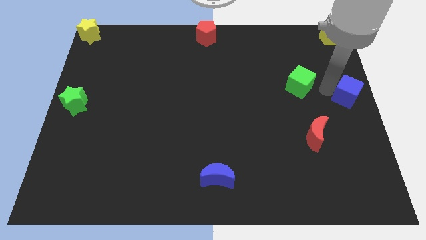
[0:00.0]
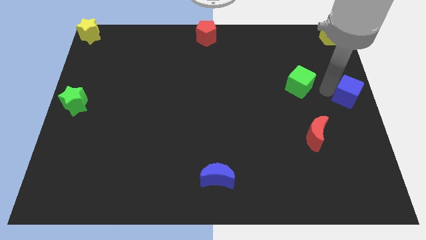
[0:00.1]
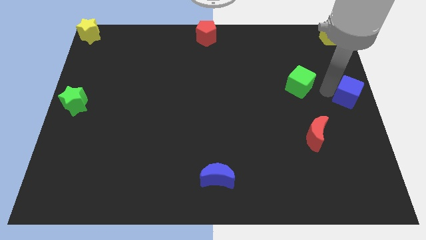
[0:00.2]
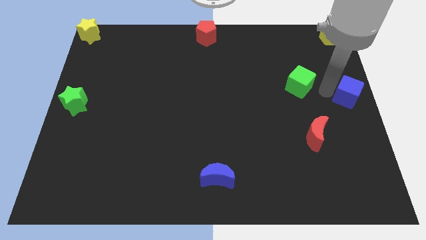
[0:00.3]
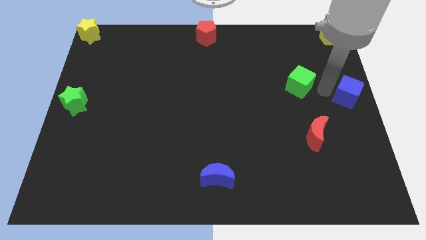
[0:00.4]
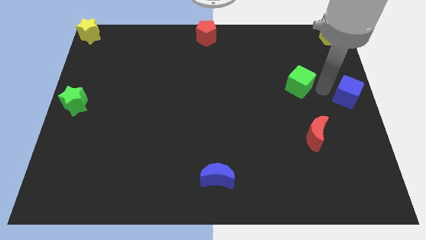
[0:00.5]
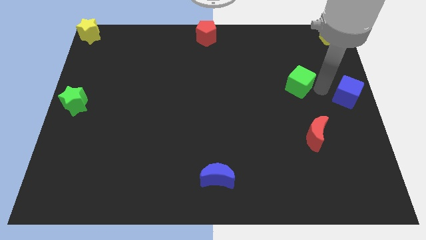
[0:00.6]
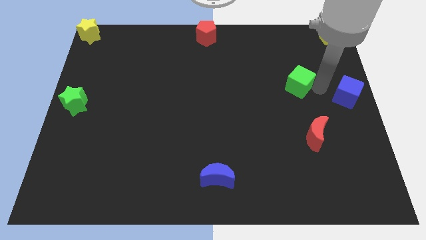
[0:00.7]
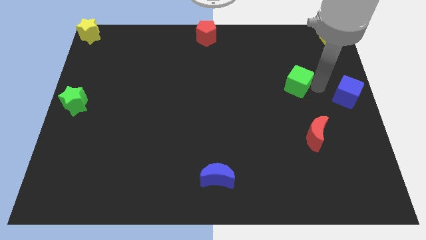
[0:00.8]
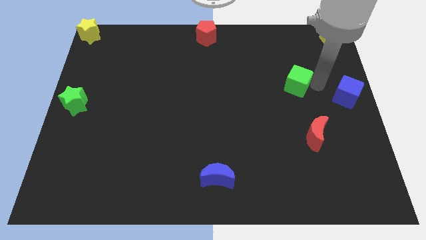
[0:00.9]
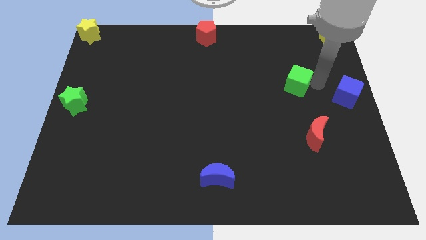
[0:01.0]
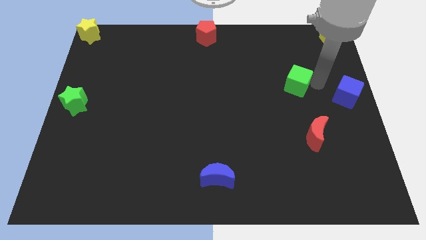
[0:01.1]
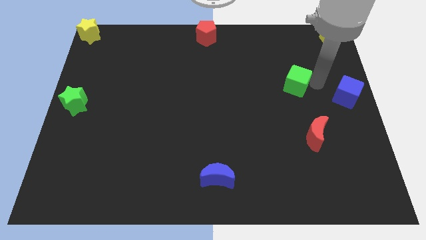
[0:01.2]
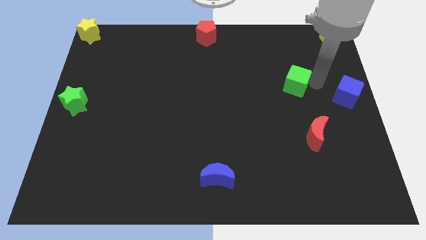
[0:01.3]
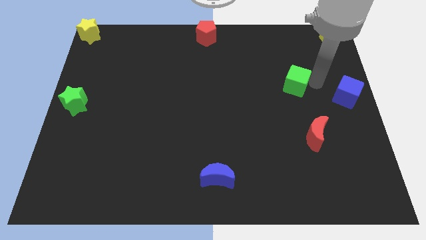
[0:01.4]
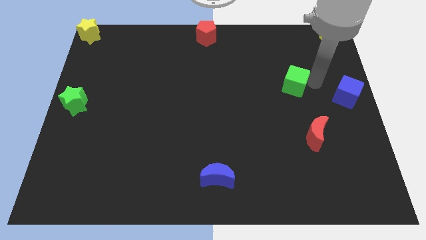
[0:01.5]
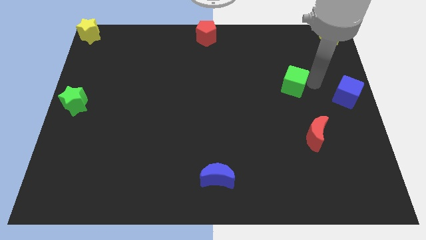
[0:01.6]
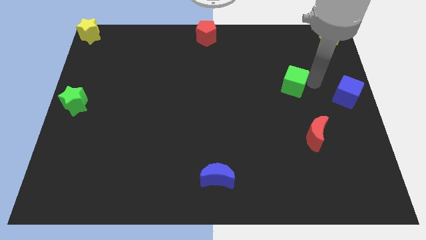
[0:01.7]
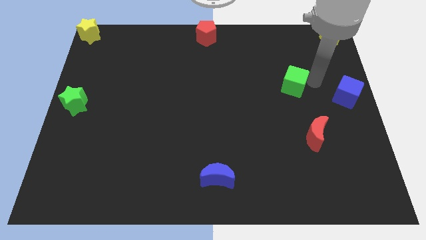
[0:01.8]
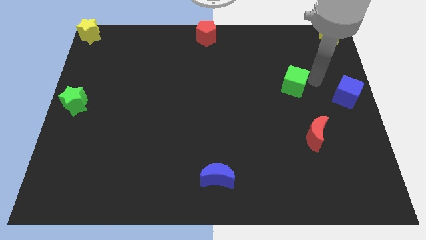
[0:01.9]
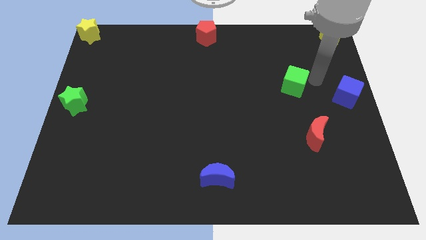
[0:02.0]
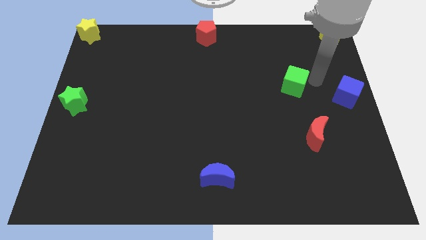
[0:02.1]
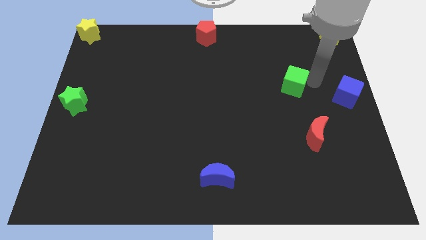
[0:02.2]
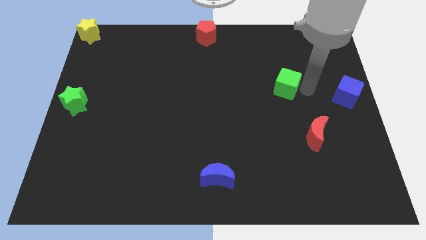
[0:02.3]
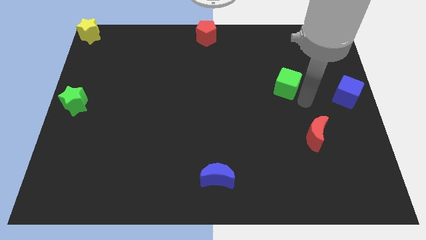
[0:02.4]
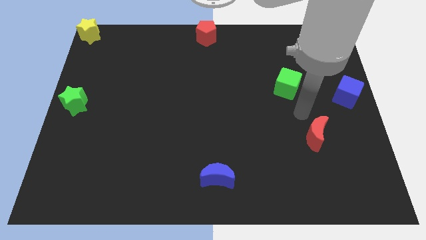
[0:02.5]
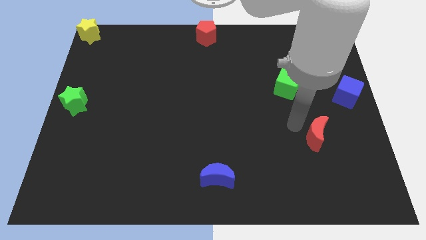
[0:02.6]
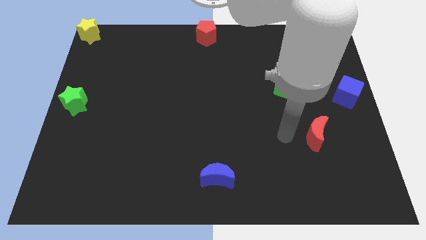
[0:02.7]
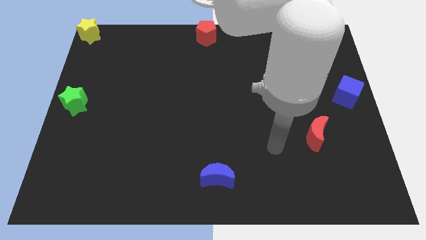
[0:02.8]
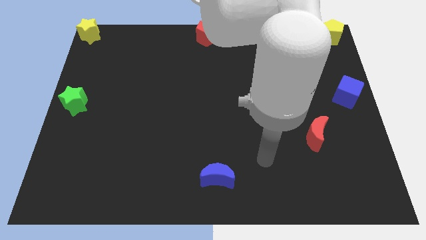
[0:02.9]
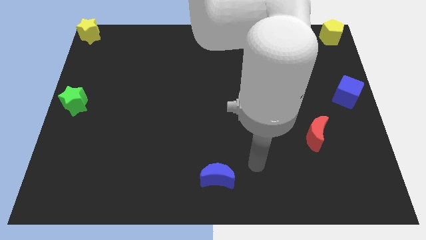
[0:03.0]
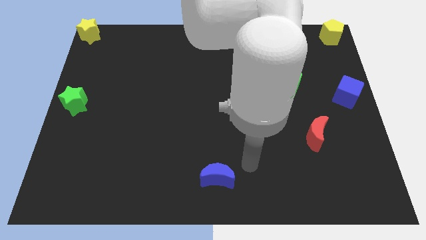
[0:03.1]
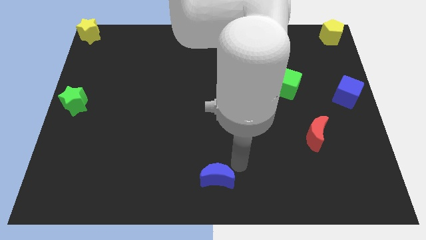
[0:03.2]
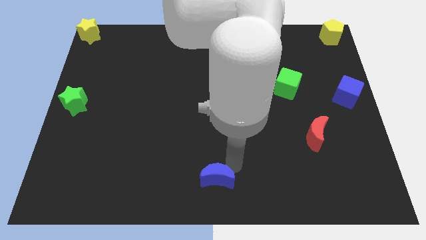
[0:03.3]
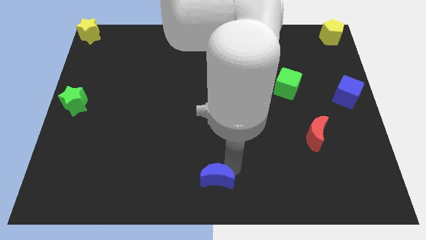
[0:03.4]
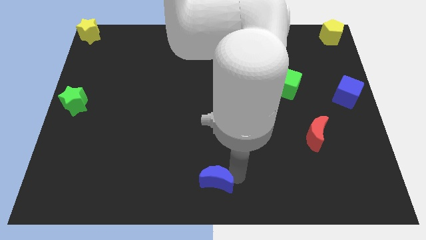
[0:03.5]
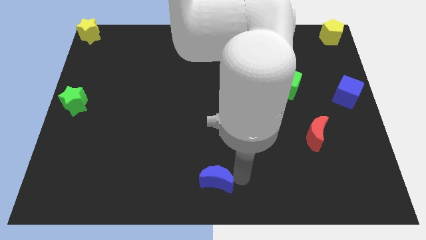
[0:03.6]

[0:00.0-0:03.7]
move your arm away from the blue cube

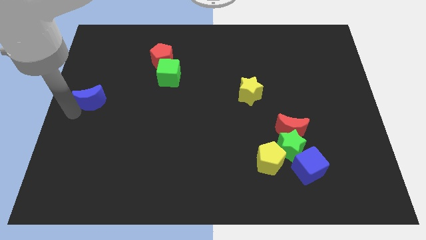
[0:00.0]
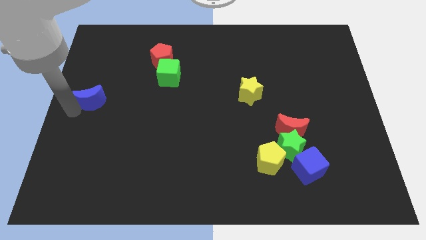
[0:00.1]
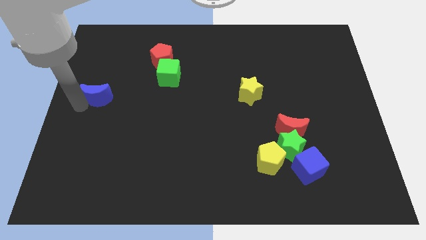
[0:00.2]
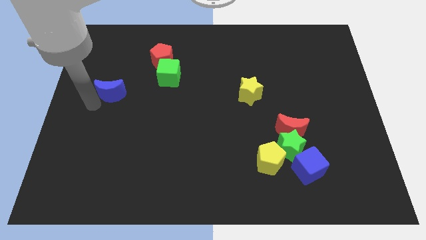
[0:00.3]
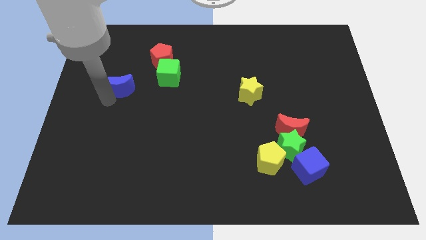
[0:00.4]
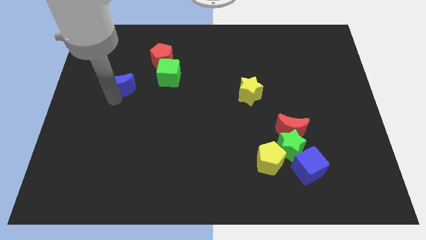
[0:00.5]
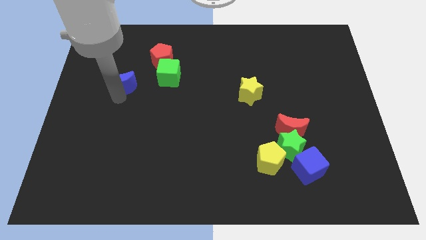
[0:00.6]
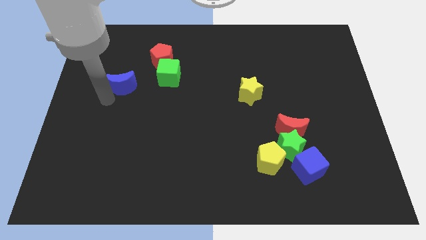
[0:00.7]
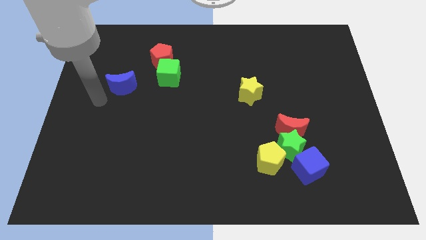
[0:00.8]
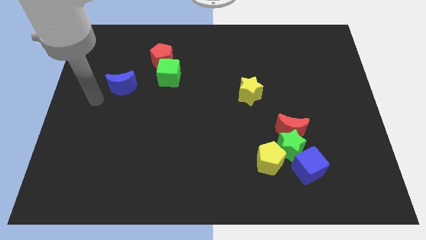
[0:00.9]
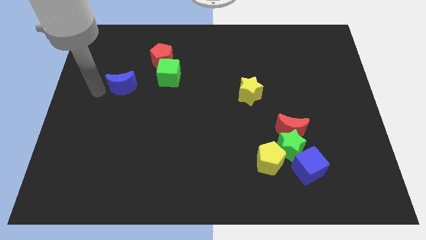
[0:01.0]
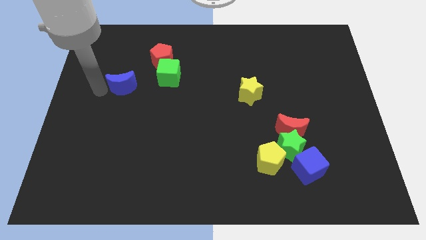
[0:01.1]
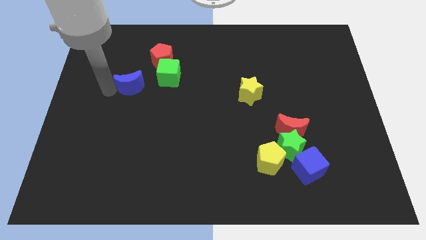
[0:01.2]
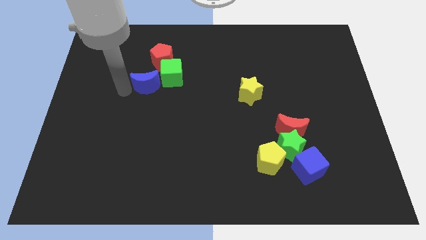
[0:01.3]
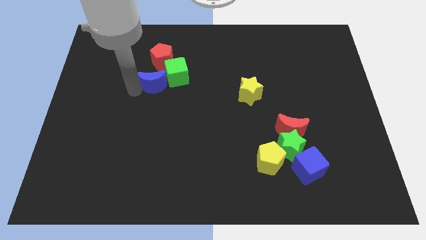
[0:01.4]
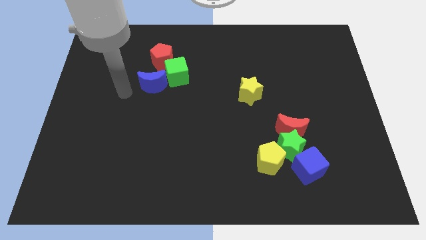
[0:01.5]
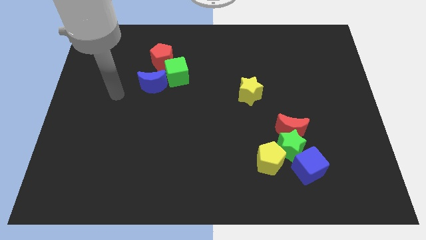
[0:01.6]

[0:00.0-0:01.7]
slide the blue crescent into the green cube

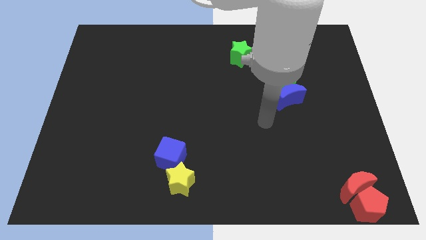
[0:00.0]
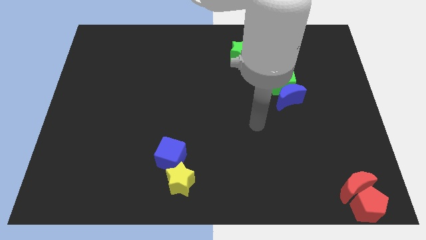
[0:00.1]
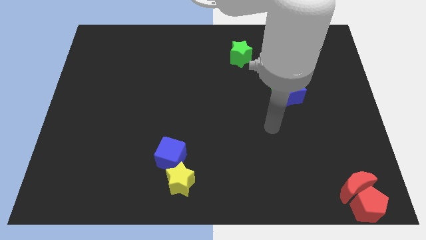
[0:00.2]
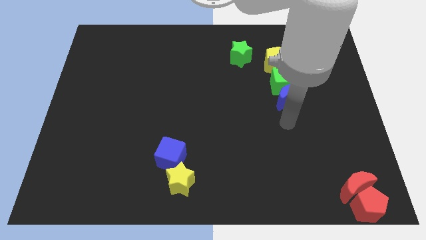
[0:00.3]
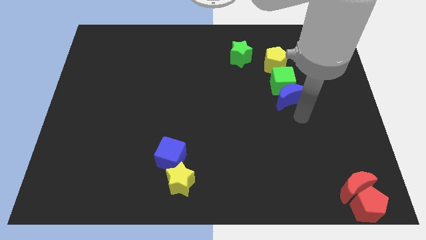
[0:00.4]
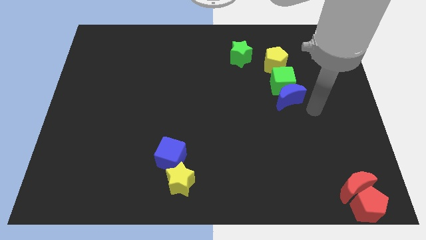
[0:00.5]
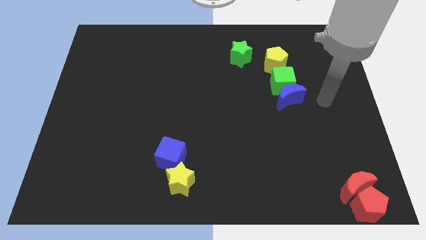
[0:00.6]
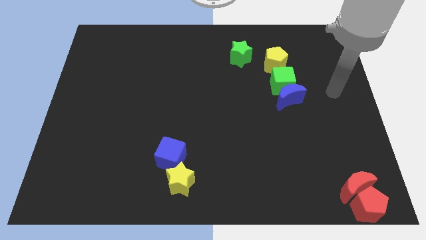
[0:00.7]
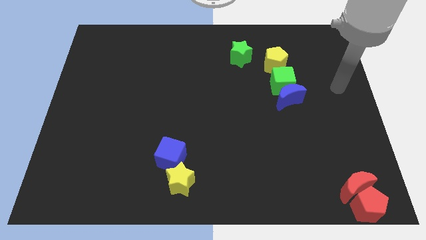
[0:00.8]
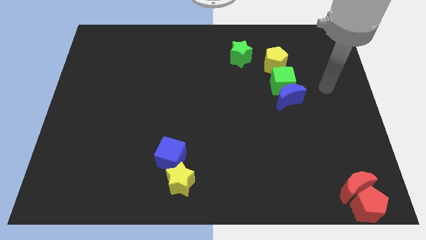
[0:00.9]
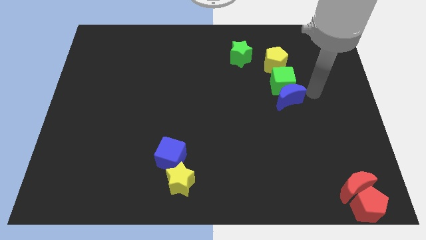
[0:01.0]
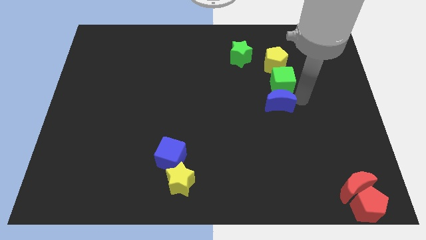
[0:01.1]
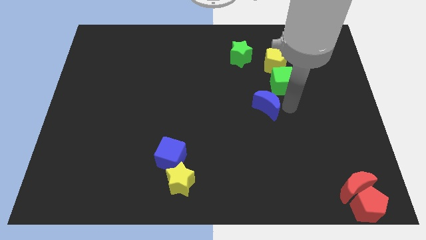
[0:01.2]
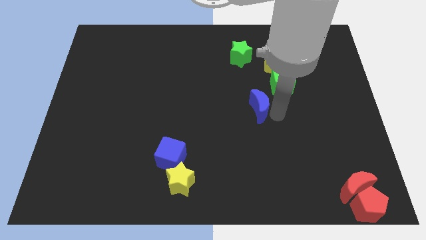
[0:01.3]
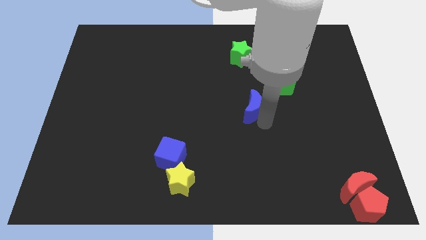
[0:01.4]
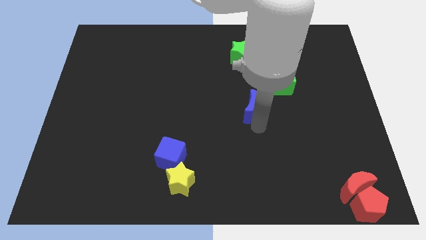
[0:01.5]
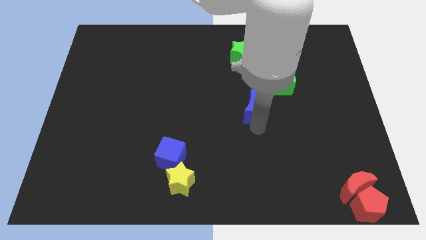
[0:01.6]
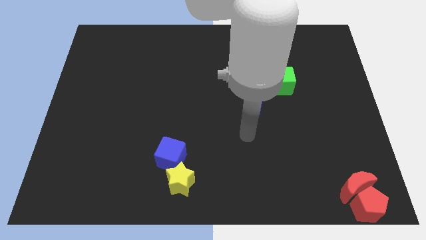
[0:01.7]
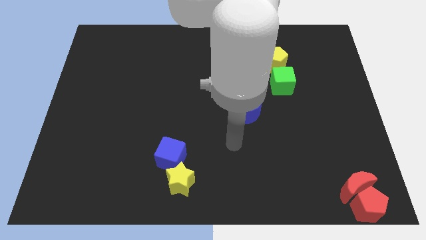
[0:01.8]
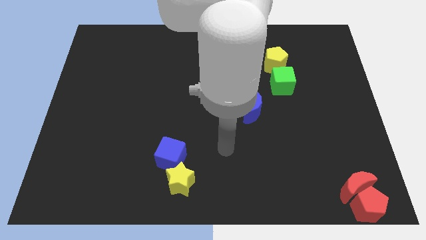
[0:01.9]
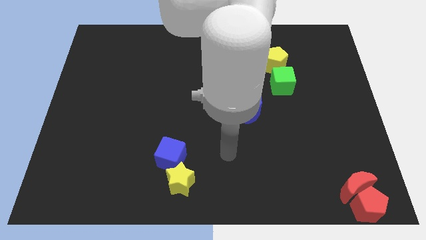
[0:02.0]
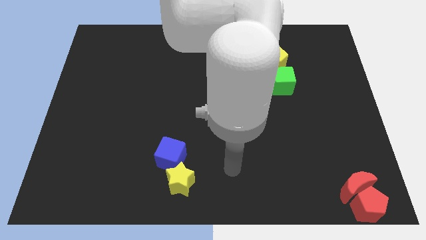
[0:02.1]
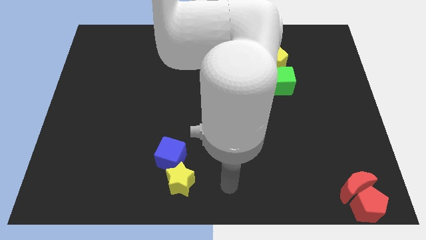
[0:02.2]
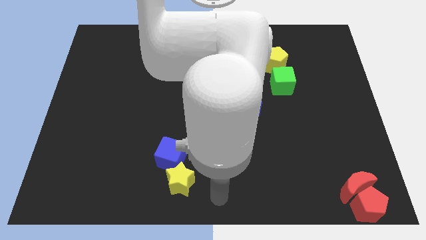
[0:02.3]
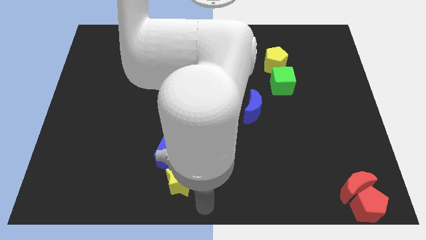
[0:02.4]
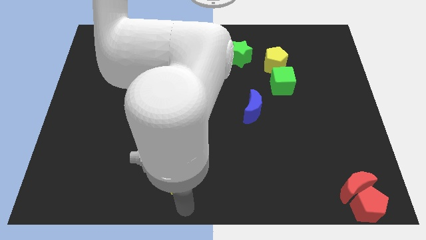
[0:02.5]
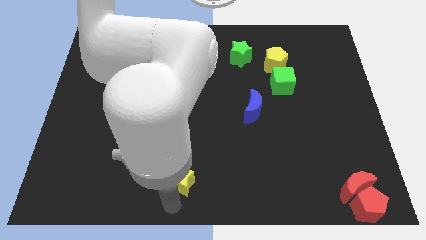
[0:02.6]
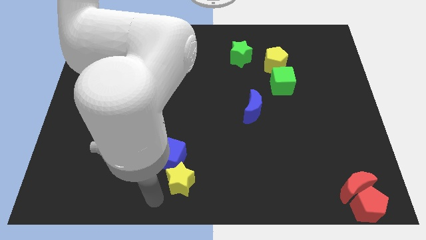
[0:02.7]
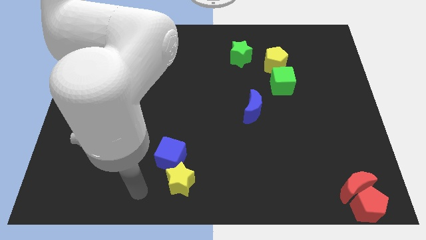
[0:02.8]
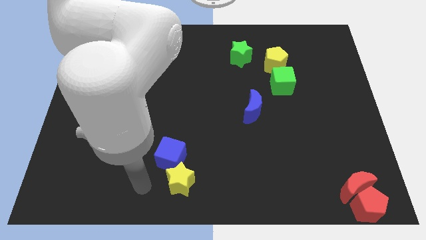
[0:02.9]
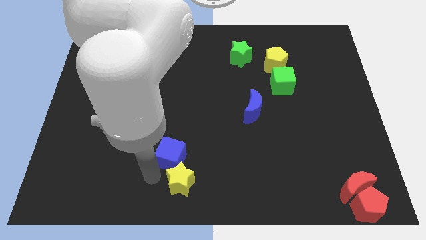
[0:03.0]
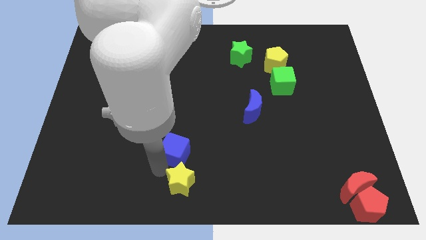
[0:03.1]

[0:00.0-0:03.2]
separate blue moon from the green cube

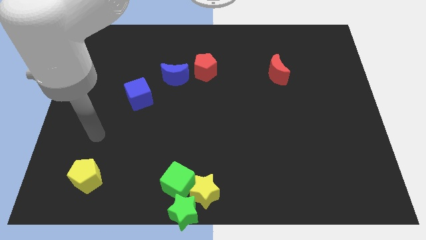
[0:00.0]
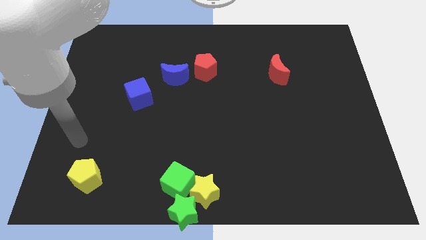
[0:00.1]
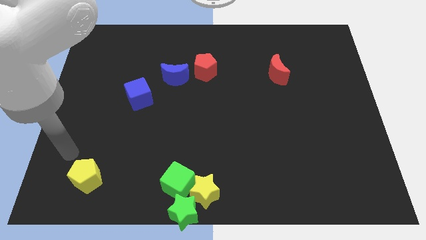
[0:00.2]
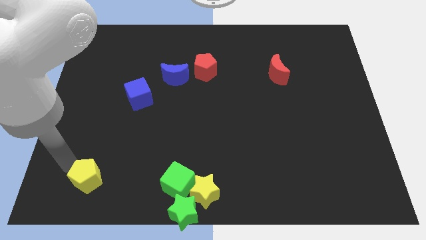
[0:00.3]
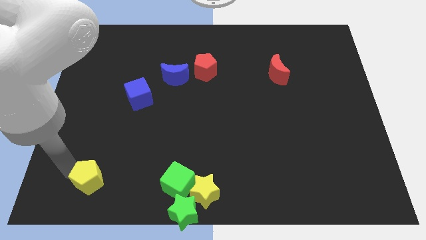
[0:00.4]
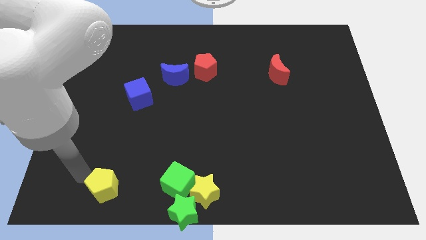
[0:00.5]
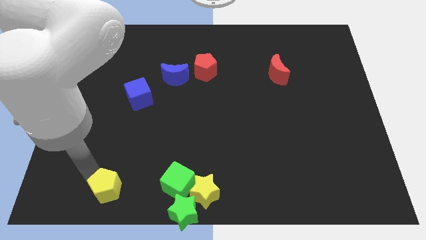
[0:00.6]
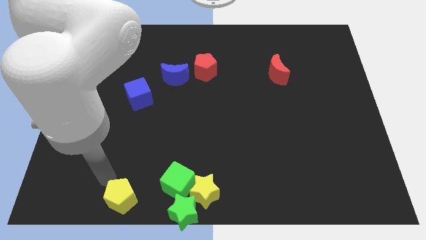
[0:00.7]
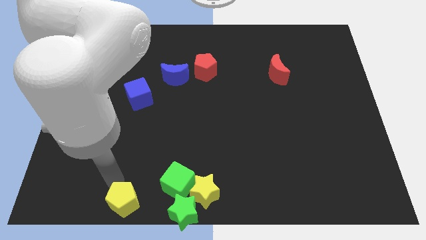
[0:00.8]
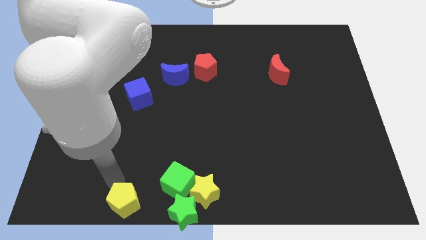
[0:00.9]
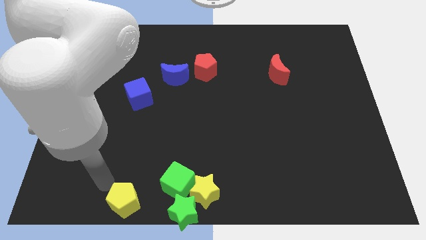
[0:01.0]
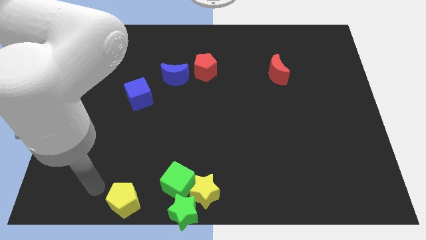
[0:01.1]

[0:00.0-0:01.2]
place the yellow pentagon to the left of the green star
